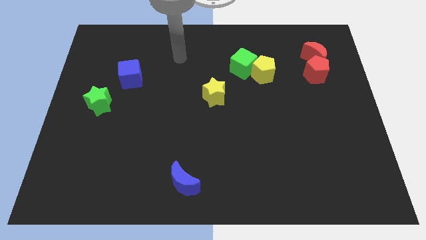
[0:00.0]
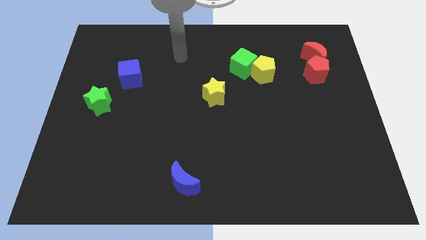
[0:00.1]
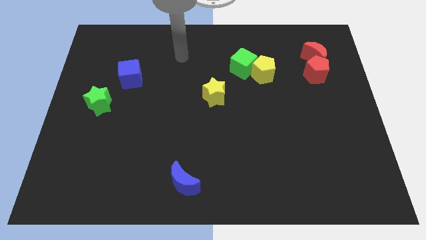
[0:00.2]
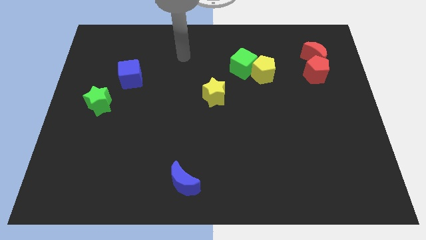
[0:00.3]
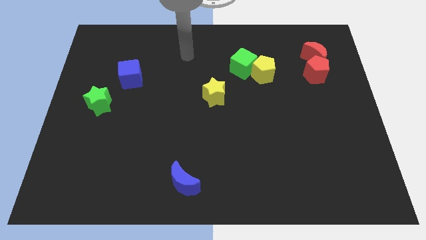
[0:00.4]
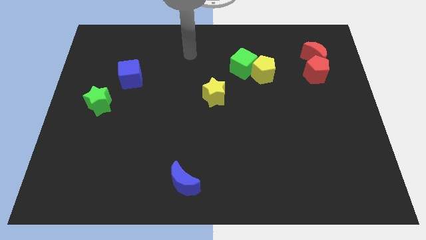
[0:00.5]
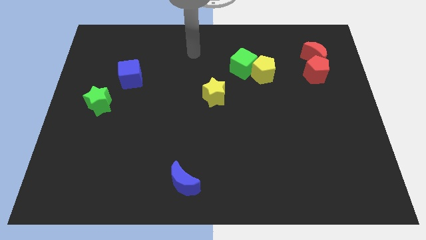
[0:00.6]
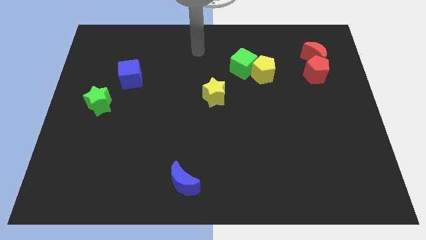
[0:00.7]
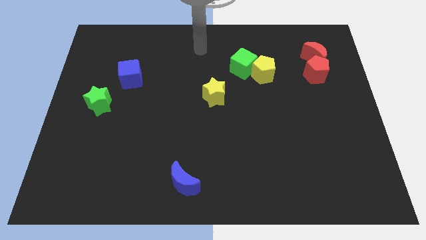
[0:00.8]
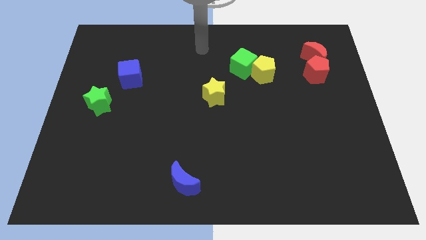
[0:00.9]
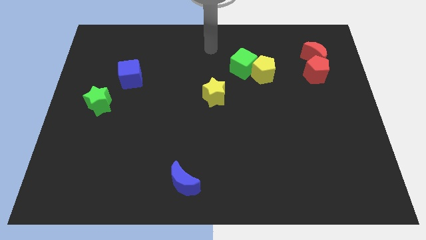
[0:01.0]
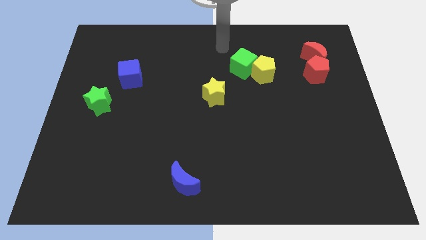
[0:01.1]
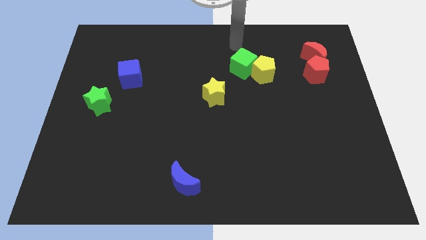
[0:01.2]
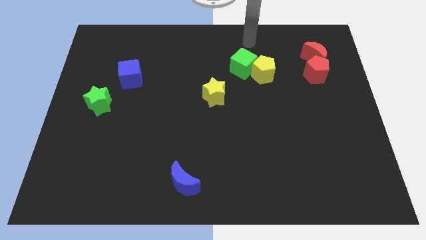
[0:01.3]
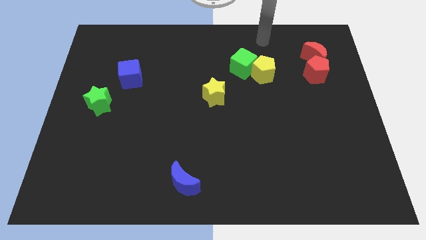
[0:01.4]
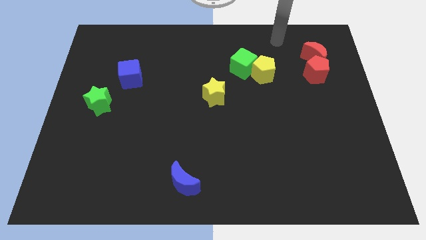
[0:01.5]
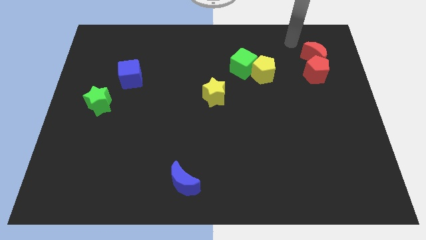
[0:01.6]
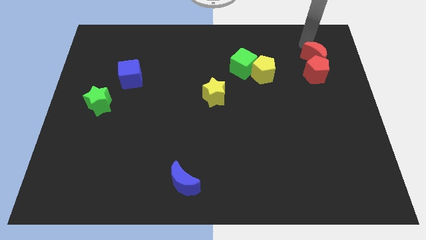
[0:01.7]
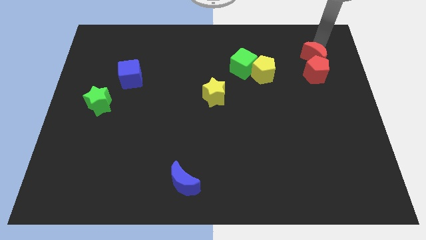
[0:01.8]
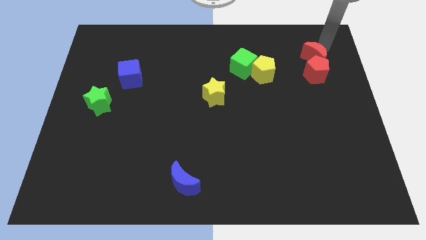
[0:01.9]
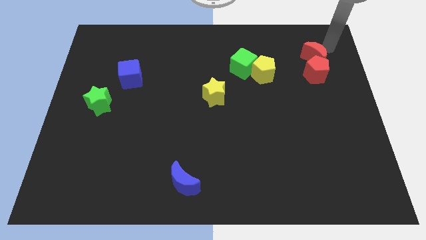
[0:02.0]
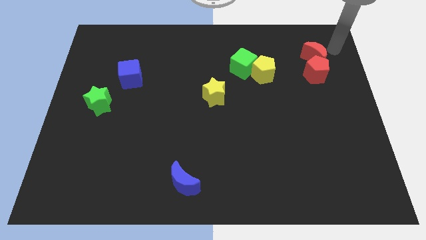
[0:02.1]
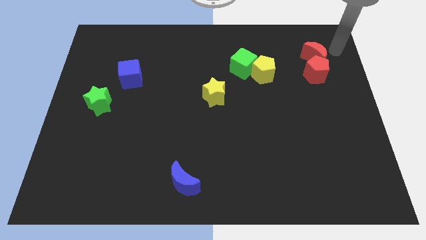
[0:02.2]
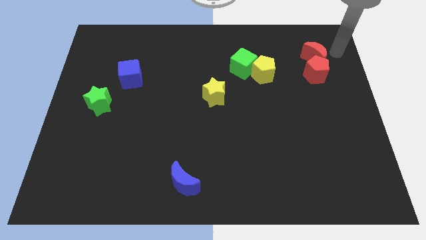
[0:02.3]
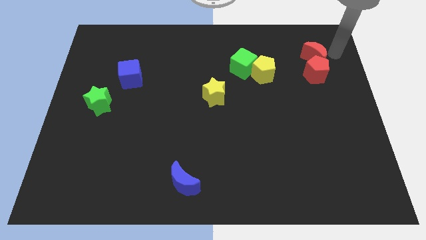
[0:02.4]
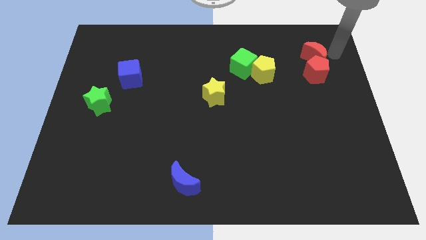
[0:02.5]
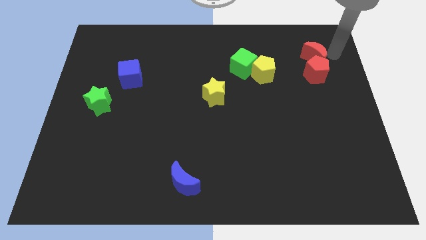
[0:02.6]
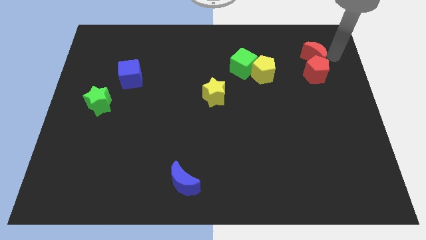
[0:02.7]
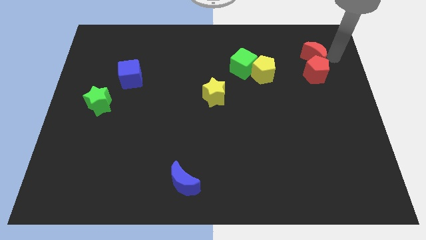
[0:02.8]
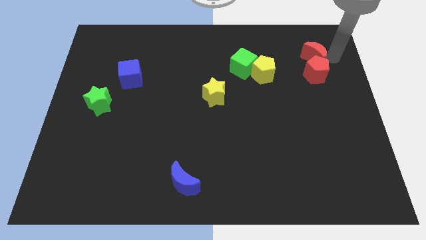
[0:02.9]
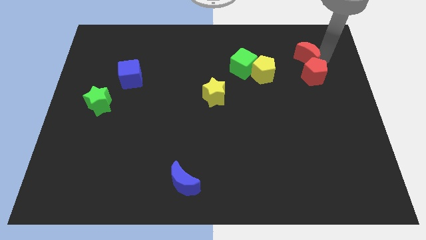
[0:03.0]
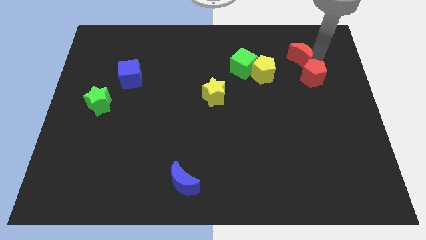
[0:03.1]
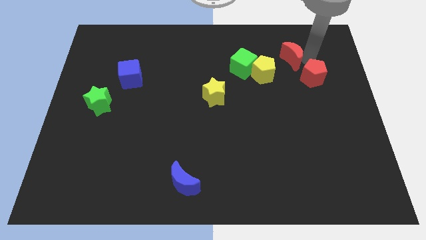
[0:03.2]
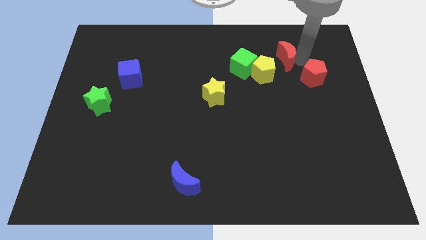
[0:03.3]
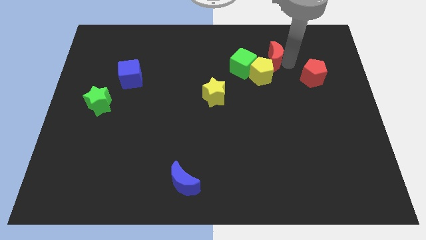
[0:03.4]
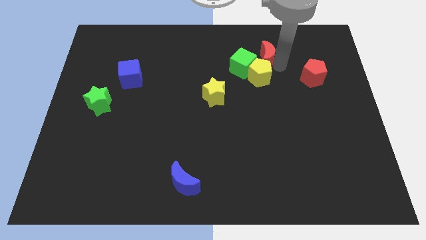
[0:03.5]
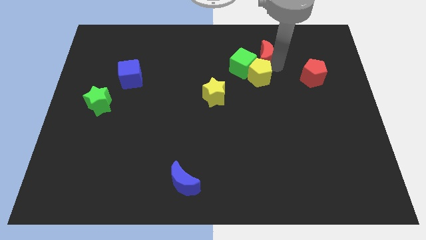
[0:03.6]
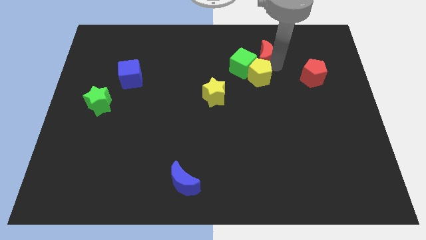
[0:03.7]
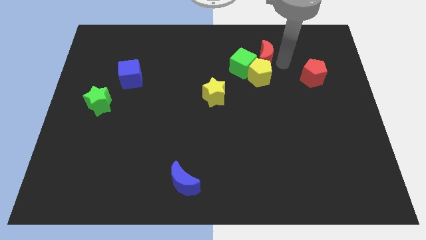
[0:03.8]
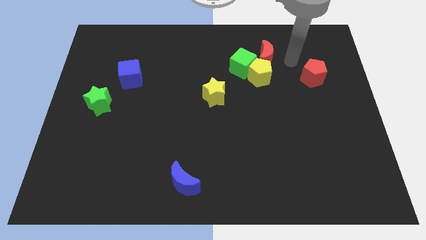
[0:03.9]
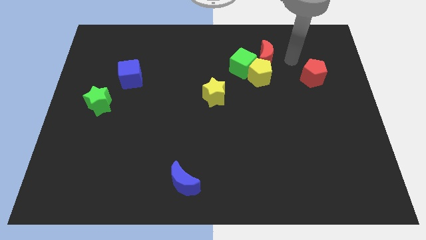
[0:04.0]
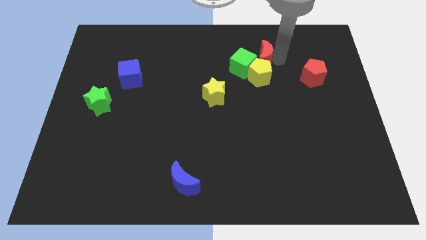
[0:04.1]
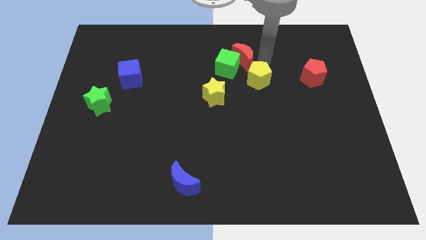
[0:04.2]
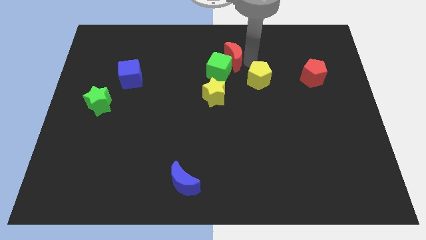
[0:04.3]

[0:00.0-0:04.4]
move red crescent into green cube

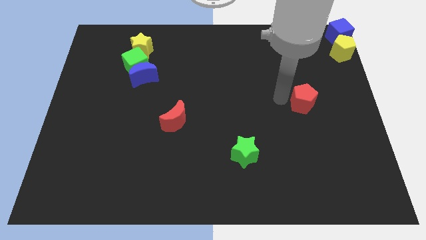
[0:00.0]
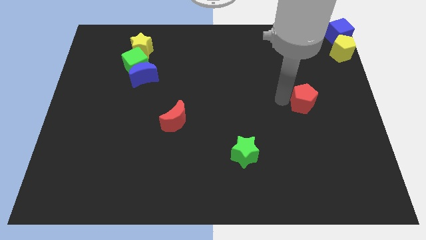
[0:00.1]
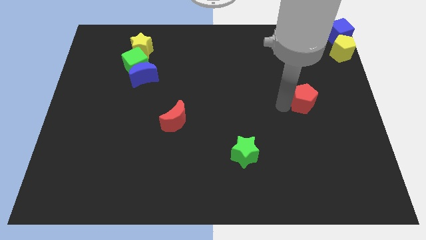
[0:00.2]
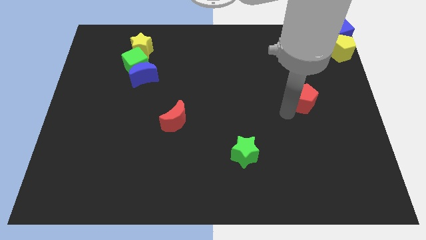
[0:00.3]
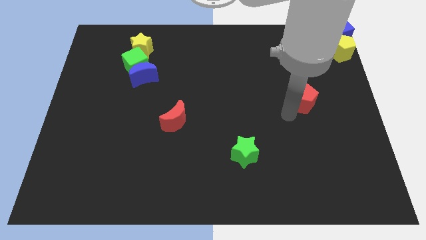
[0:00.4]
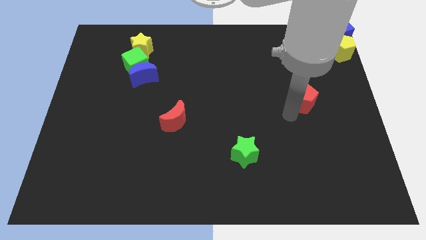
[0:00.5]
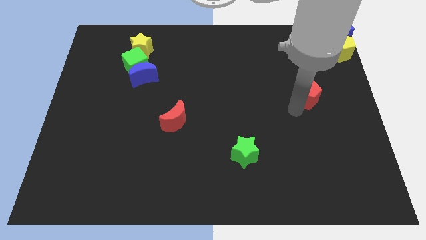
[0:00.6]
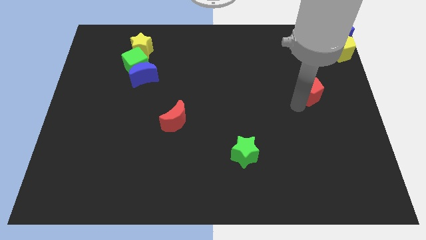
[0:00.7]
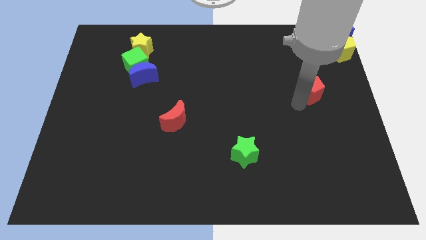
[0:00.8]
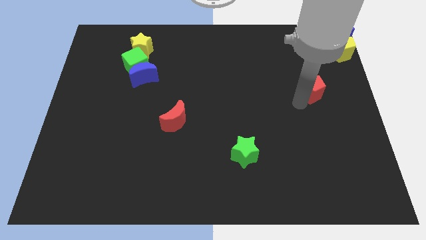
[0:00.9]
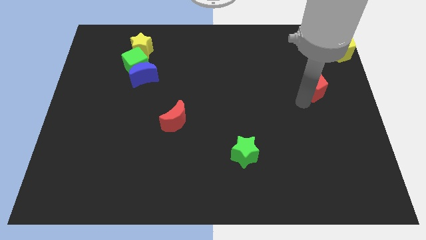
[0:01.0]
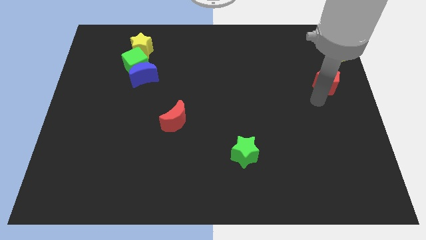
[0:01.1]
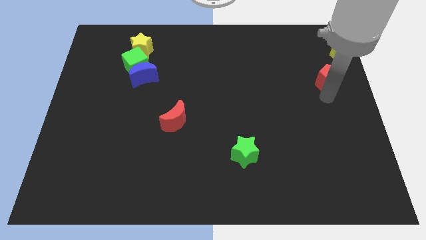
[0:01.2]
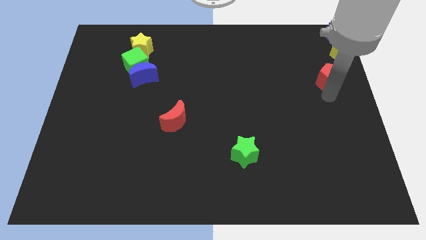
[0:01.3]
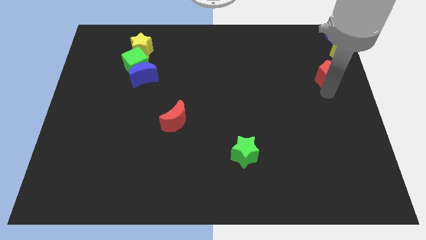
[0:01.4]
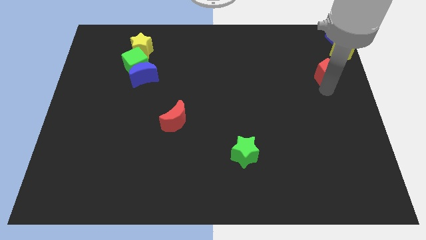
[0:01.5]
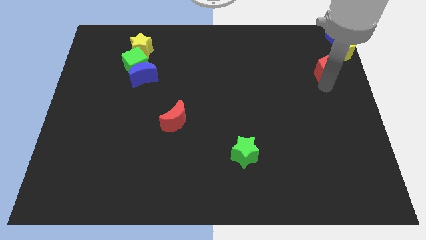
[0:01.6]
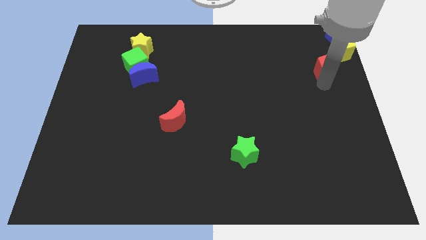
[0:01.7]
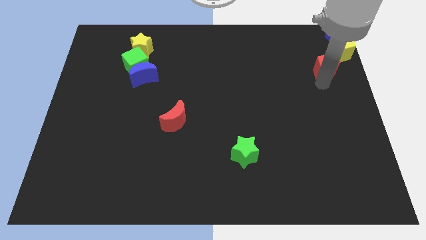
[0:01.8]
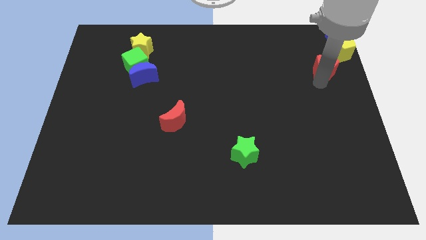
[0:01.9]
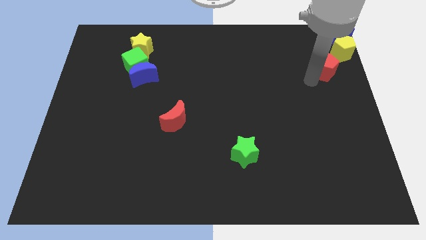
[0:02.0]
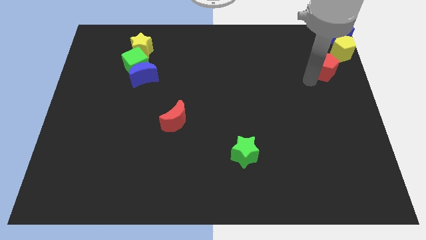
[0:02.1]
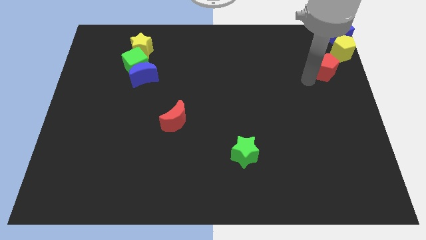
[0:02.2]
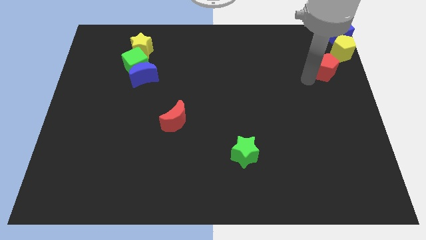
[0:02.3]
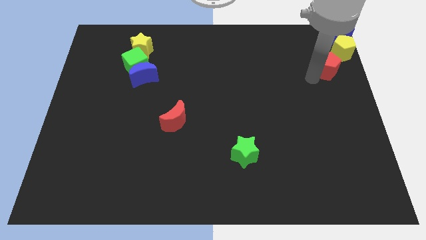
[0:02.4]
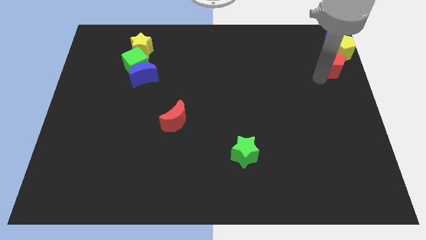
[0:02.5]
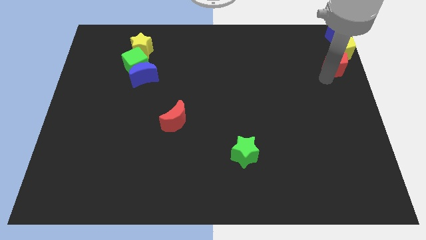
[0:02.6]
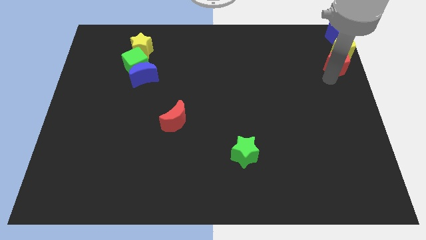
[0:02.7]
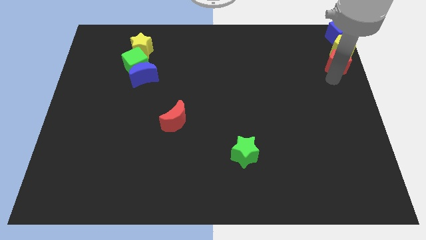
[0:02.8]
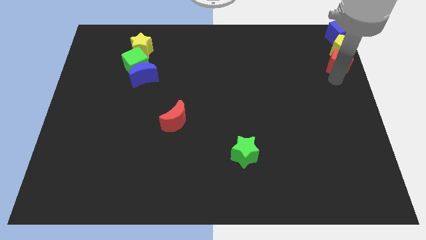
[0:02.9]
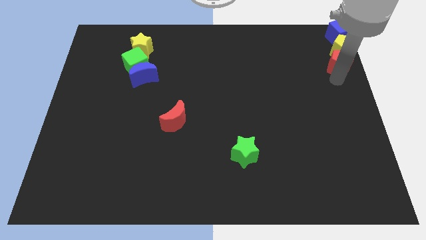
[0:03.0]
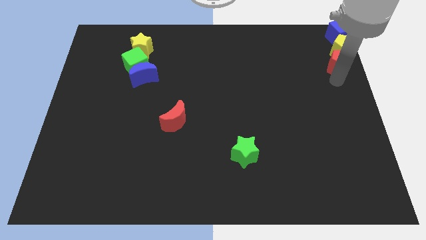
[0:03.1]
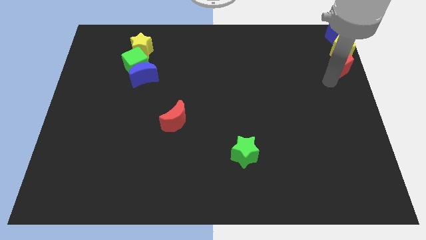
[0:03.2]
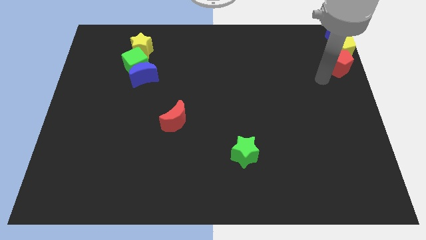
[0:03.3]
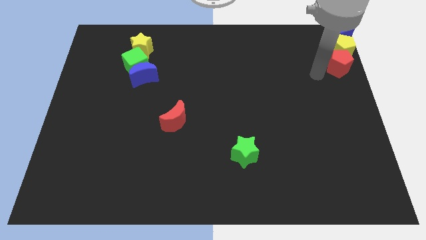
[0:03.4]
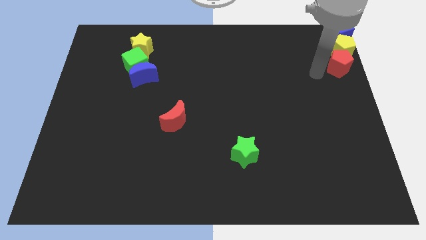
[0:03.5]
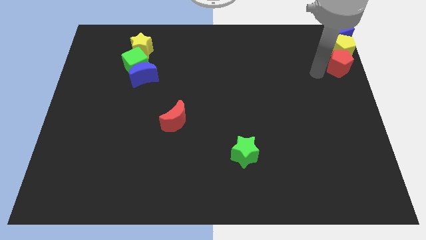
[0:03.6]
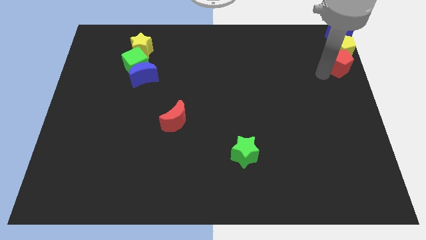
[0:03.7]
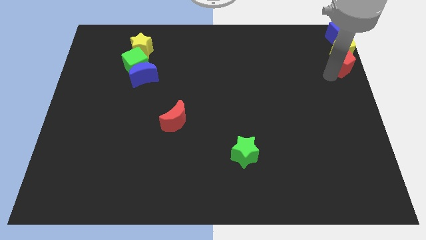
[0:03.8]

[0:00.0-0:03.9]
move the red pentagon towards the yellow pentagon

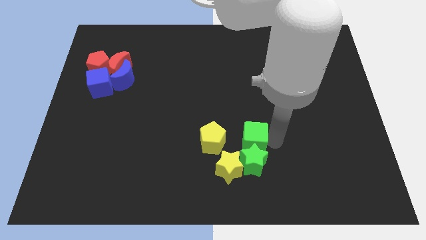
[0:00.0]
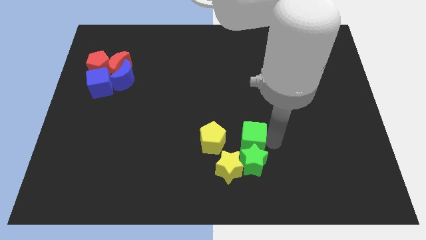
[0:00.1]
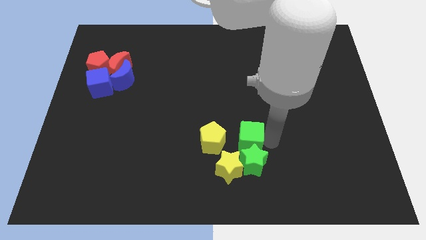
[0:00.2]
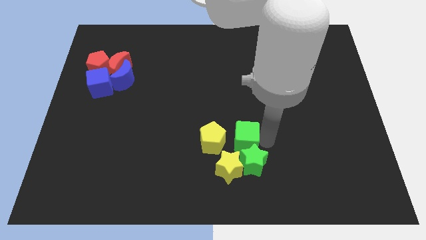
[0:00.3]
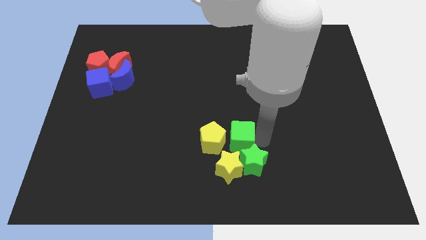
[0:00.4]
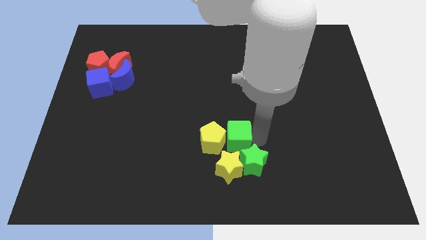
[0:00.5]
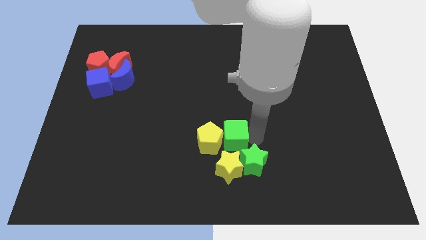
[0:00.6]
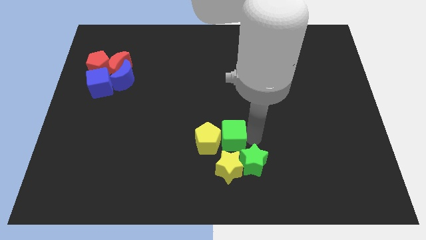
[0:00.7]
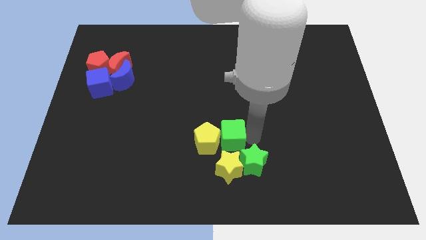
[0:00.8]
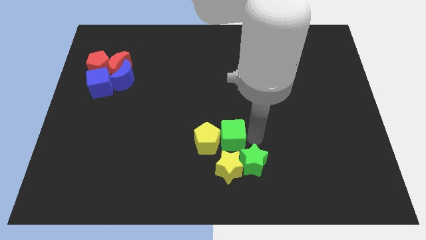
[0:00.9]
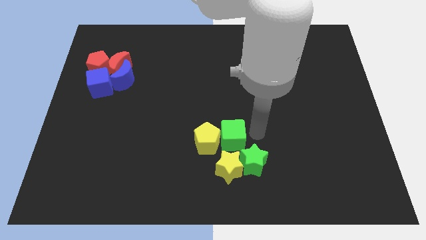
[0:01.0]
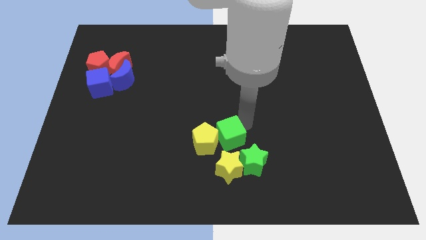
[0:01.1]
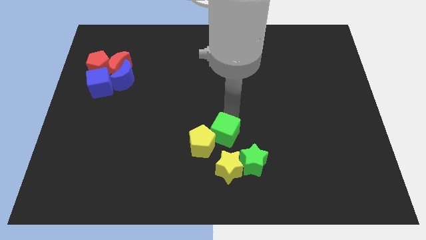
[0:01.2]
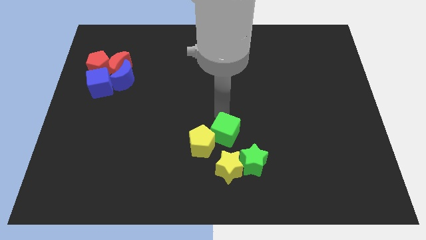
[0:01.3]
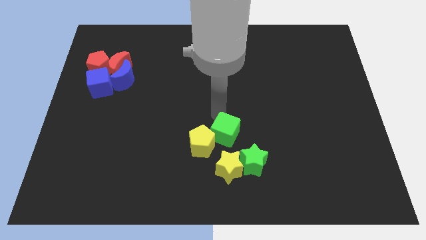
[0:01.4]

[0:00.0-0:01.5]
push green cube above yellow star
